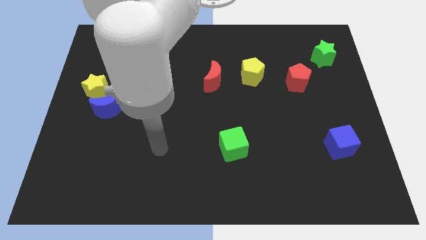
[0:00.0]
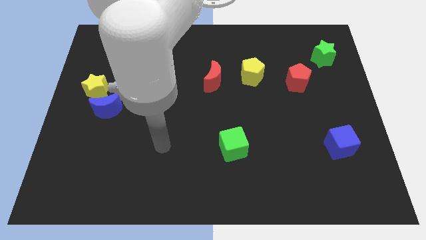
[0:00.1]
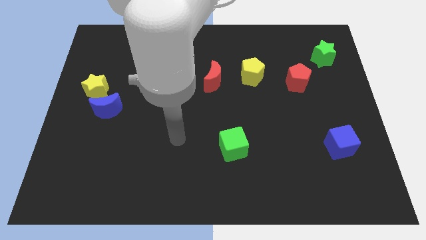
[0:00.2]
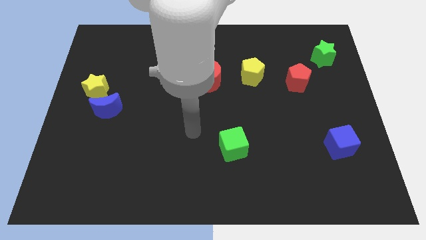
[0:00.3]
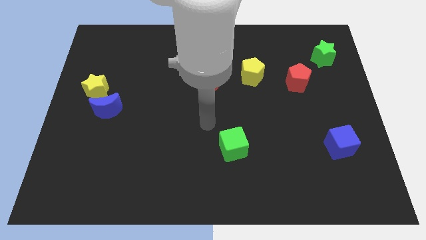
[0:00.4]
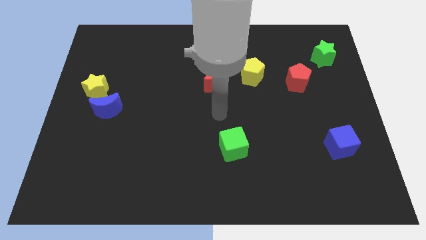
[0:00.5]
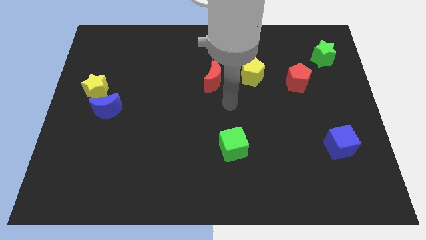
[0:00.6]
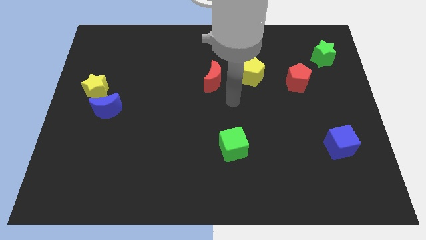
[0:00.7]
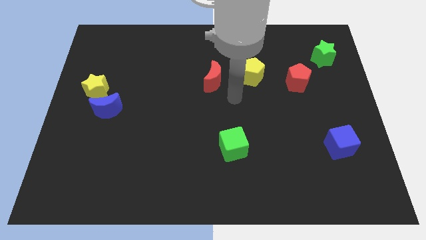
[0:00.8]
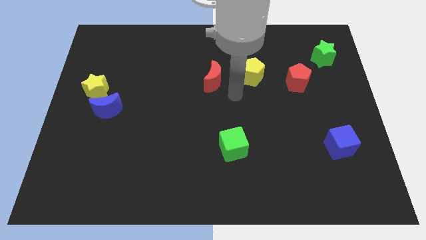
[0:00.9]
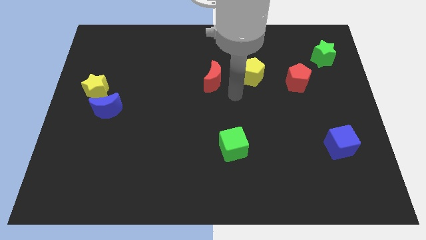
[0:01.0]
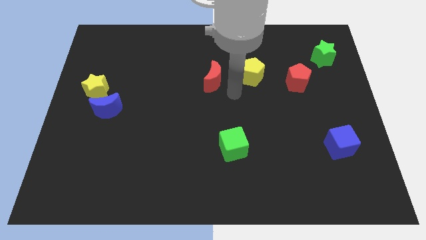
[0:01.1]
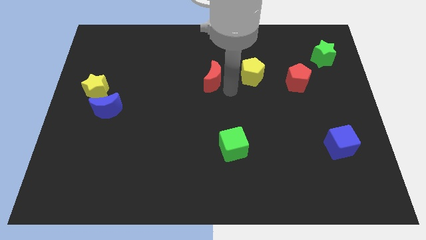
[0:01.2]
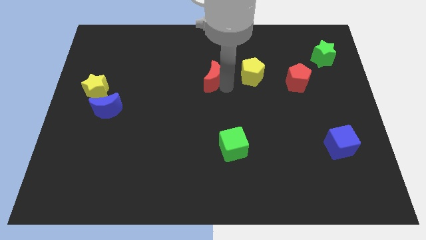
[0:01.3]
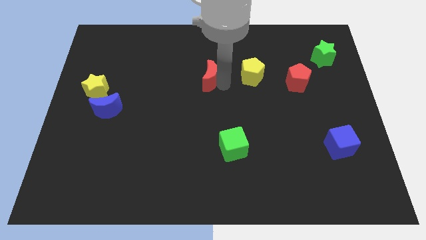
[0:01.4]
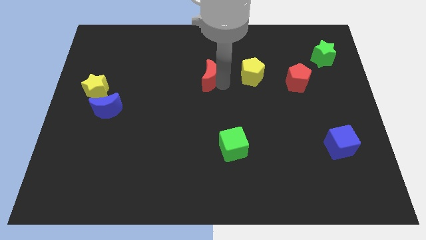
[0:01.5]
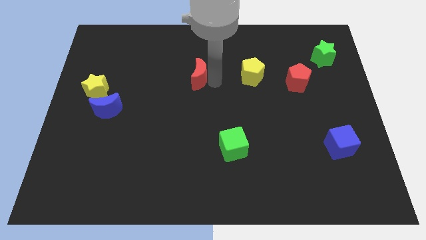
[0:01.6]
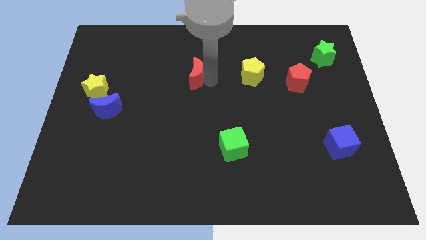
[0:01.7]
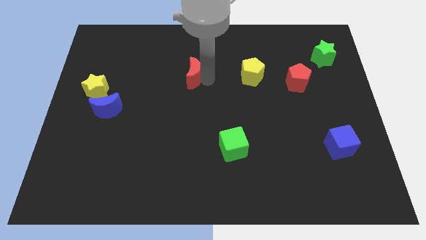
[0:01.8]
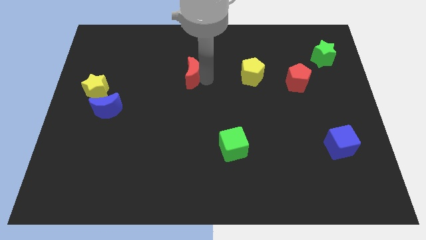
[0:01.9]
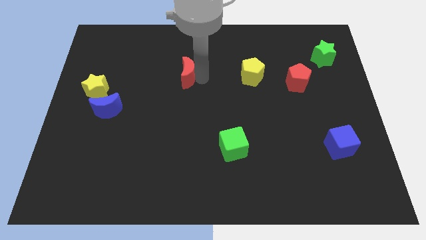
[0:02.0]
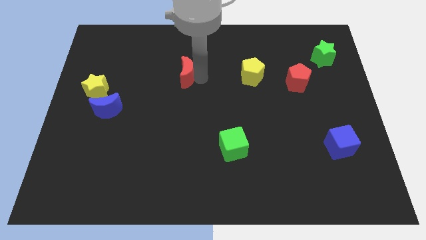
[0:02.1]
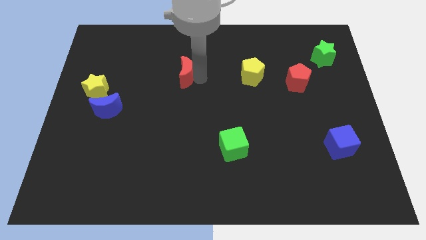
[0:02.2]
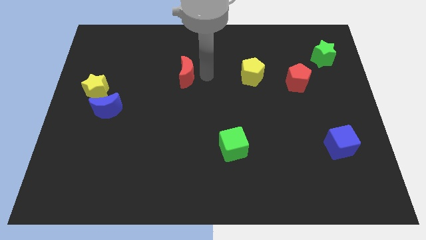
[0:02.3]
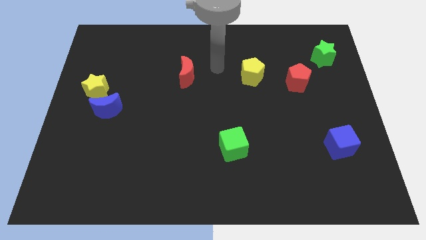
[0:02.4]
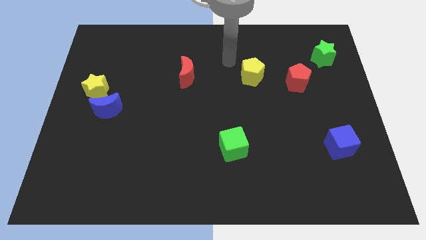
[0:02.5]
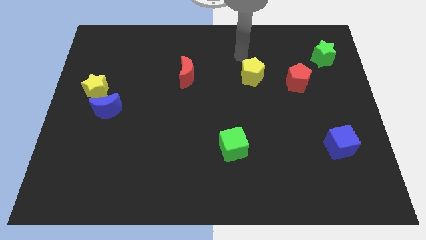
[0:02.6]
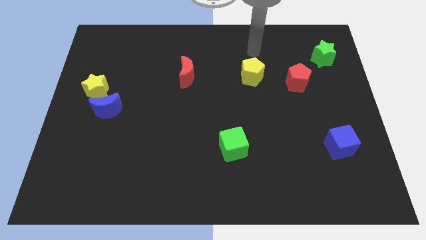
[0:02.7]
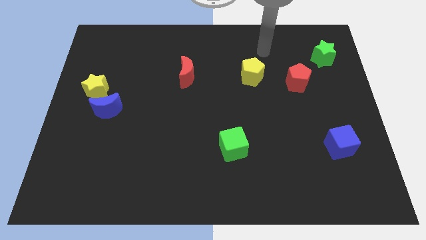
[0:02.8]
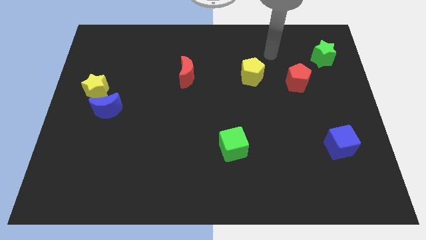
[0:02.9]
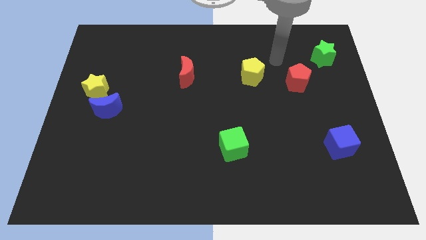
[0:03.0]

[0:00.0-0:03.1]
push the red crescent towards the left side of the board

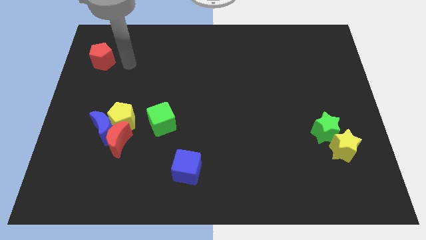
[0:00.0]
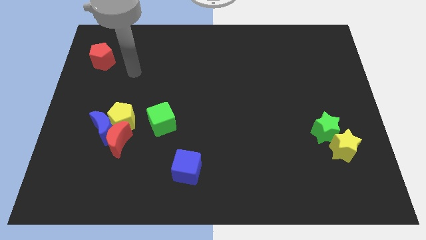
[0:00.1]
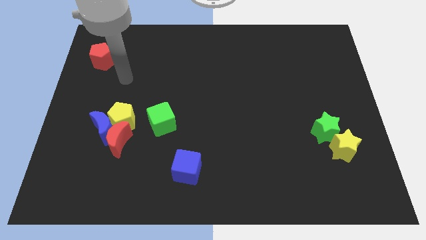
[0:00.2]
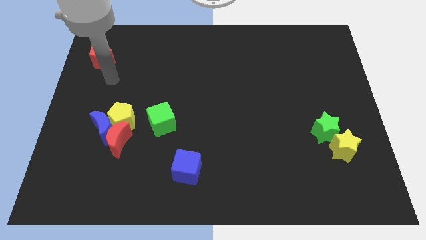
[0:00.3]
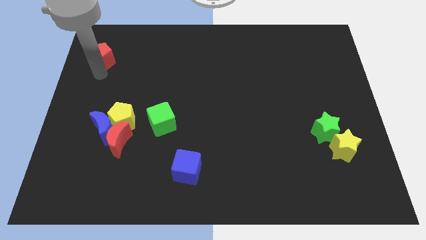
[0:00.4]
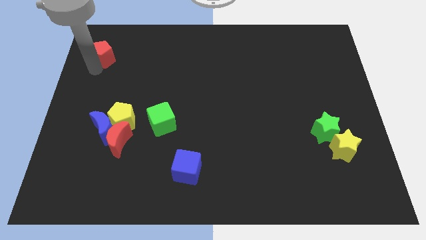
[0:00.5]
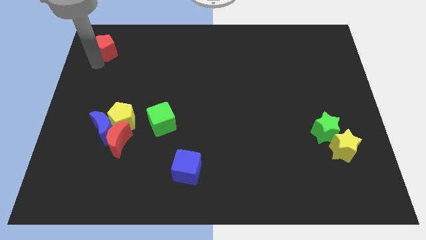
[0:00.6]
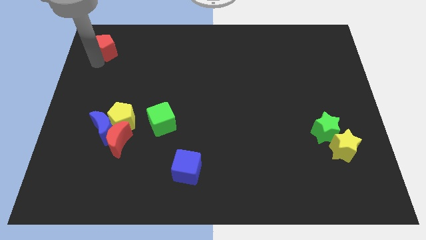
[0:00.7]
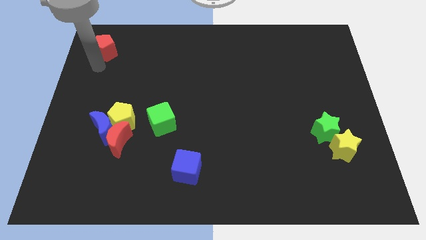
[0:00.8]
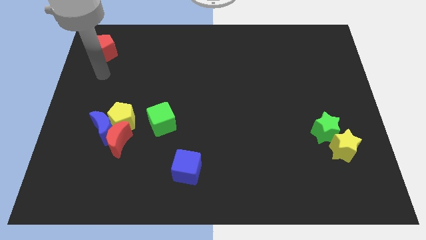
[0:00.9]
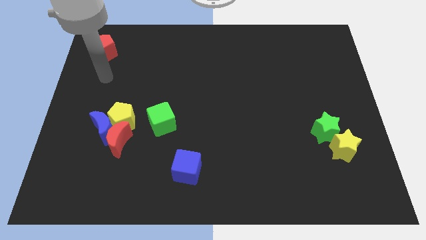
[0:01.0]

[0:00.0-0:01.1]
place red pentagon on the top left corner of the board

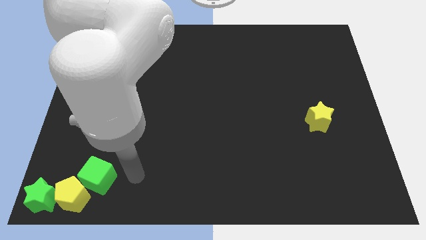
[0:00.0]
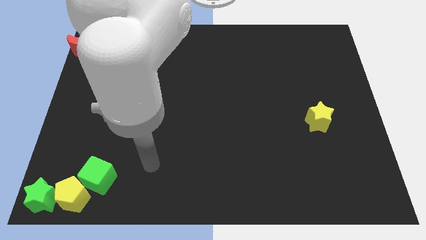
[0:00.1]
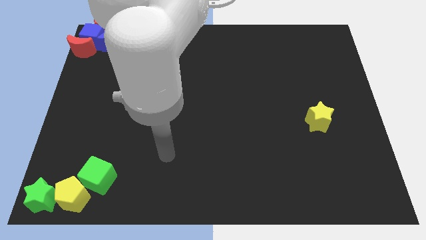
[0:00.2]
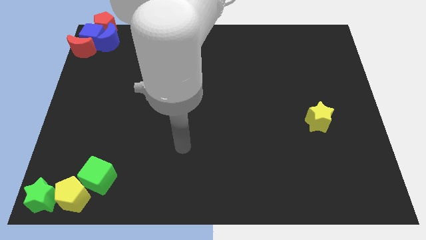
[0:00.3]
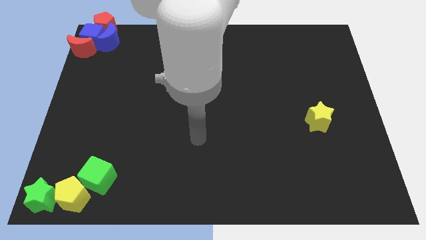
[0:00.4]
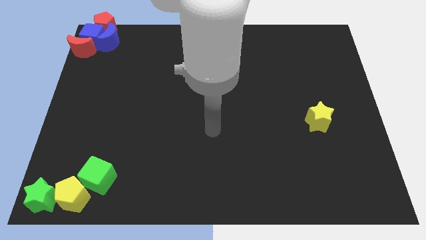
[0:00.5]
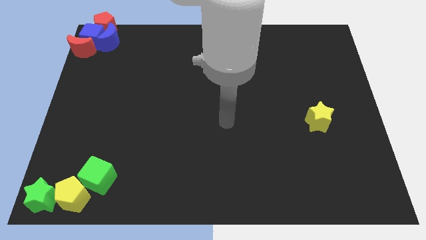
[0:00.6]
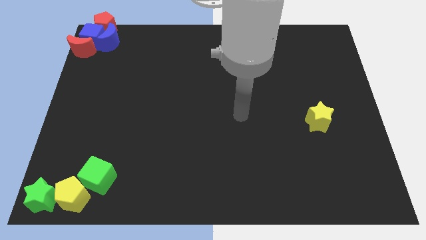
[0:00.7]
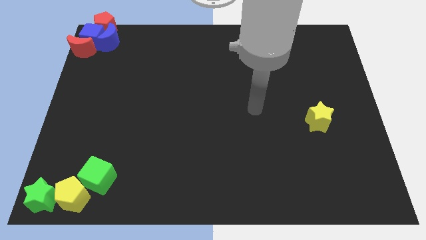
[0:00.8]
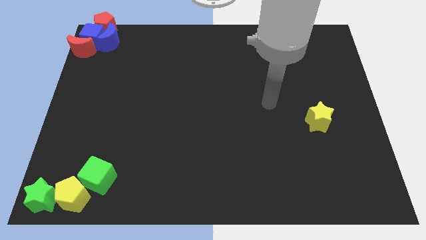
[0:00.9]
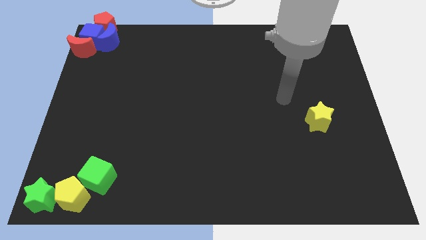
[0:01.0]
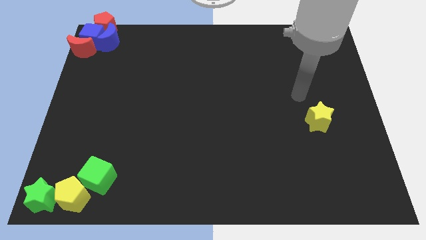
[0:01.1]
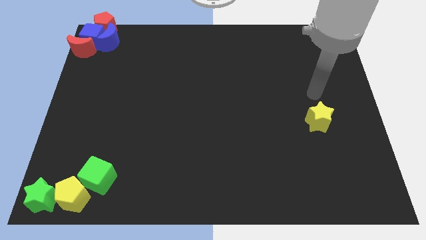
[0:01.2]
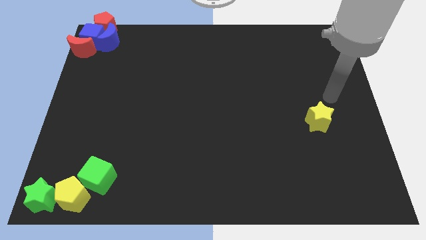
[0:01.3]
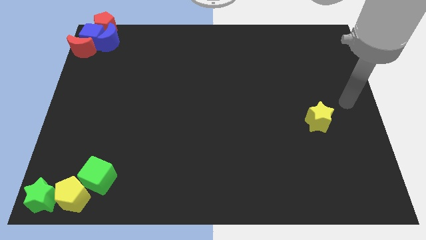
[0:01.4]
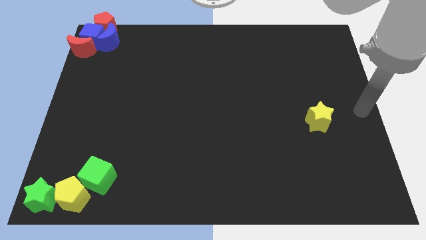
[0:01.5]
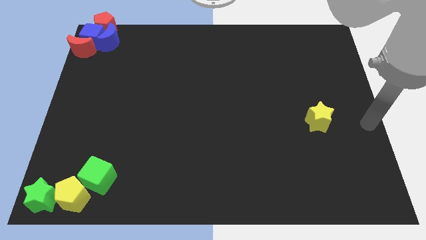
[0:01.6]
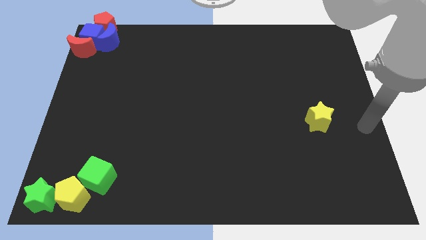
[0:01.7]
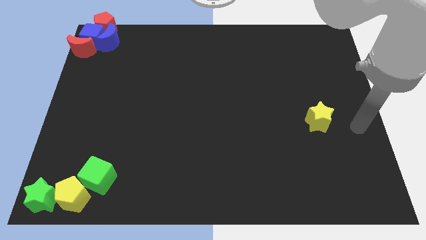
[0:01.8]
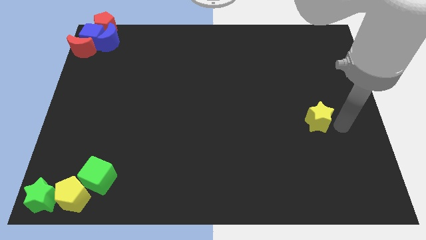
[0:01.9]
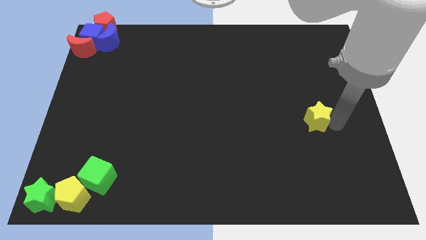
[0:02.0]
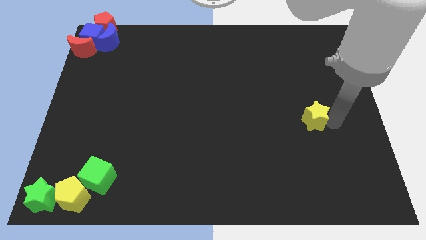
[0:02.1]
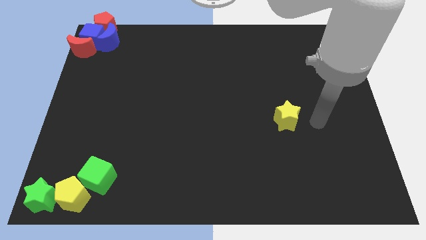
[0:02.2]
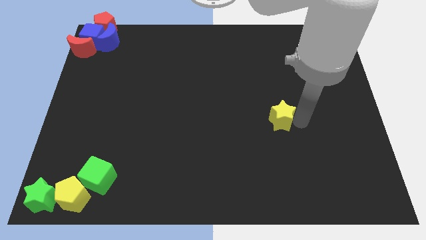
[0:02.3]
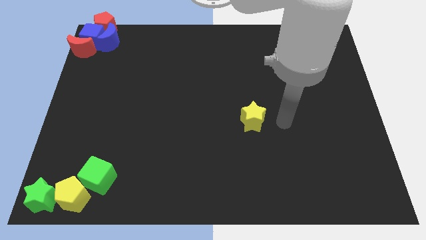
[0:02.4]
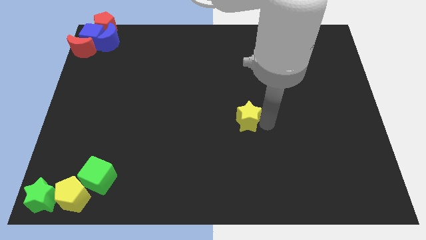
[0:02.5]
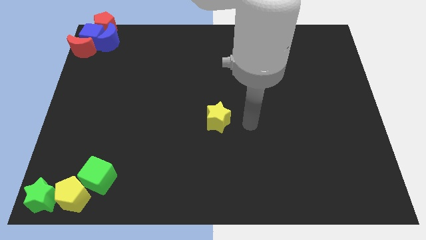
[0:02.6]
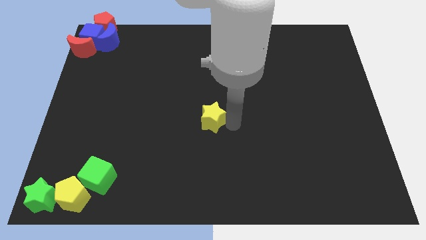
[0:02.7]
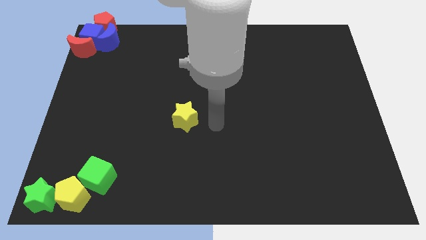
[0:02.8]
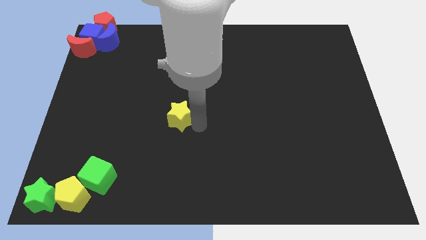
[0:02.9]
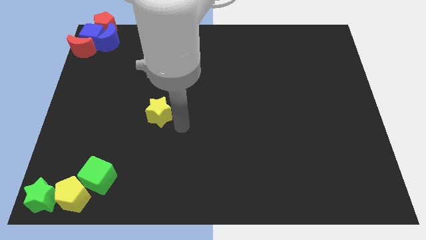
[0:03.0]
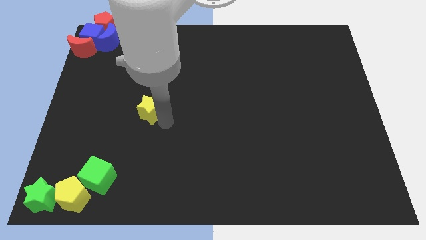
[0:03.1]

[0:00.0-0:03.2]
push the yellow star towards the center left side of the board

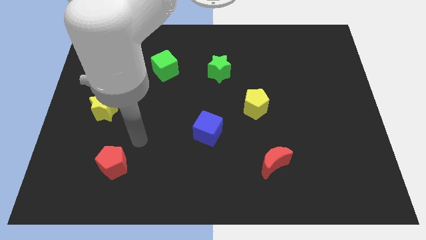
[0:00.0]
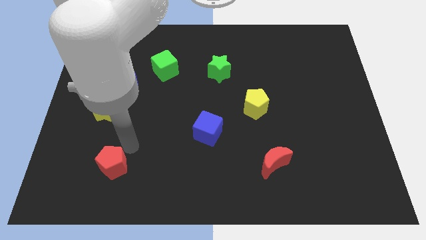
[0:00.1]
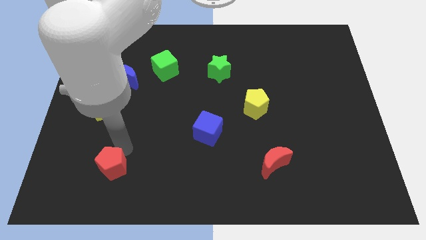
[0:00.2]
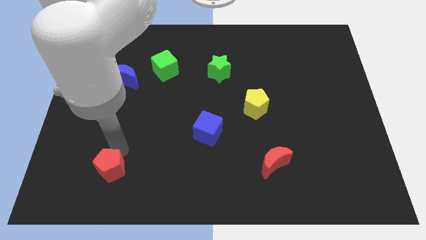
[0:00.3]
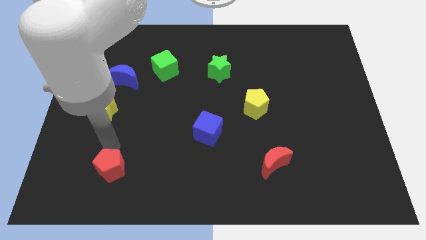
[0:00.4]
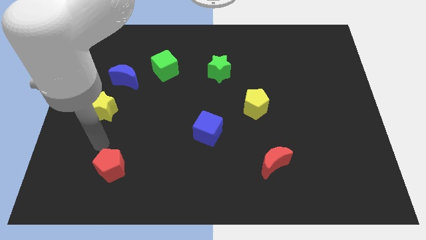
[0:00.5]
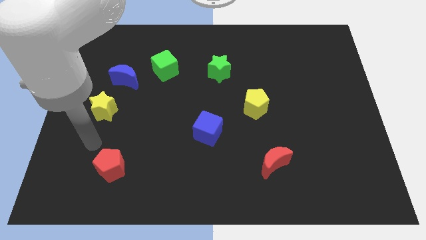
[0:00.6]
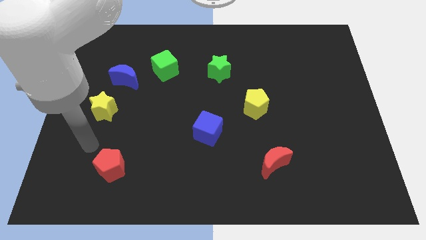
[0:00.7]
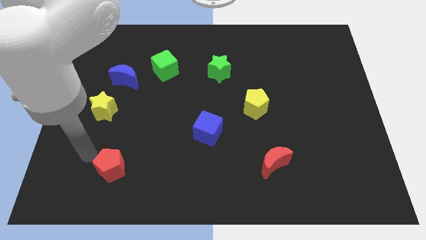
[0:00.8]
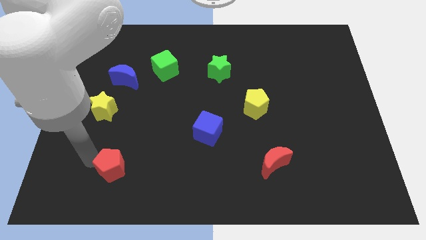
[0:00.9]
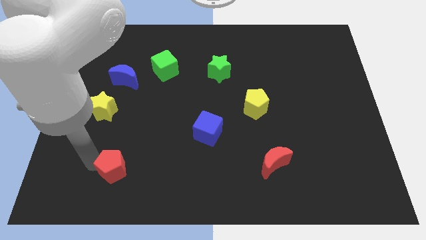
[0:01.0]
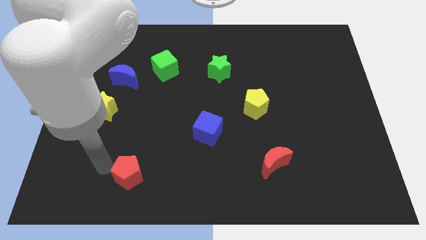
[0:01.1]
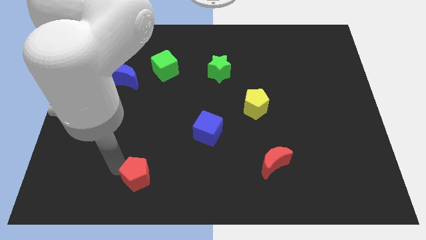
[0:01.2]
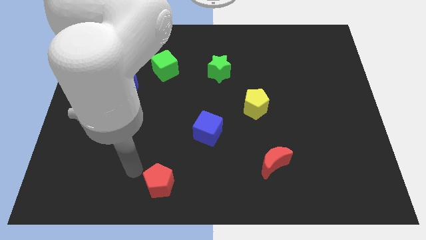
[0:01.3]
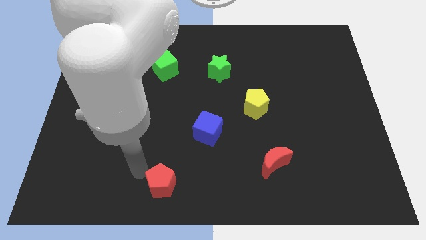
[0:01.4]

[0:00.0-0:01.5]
drag the red pentagon towards the bottom center of the board
